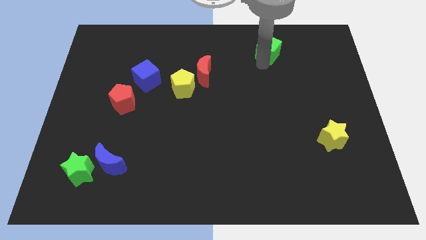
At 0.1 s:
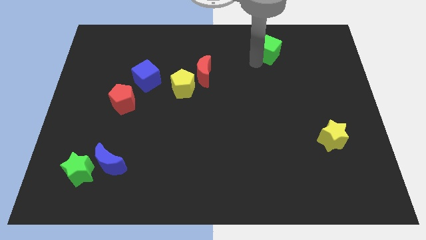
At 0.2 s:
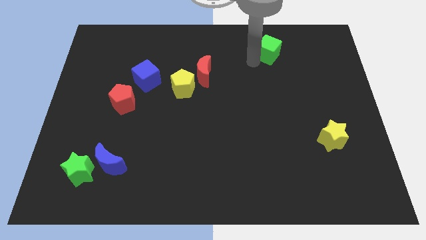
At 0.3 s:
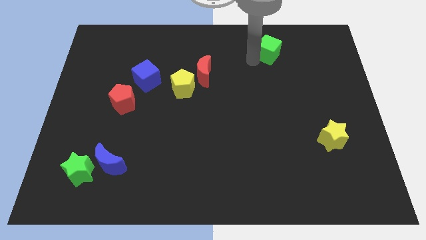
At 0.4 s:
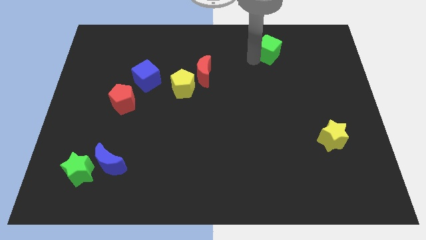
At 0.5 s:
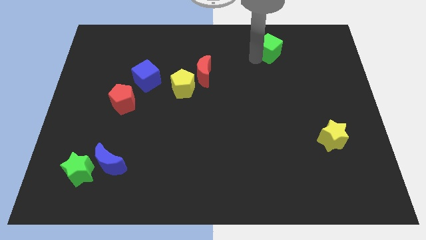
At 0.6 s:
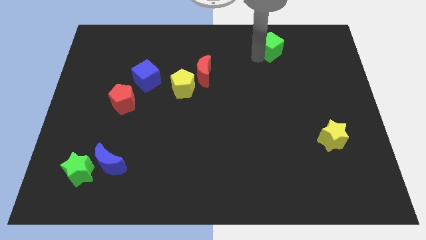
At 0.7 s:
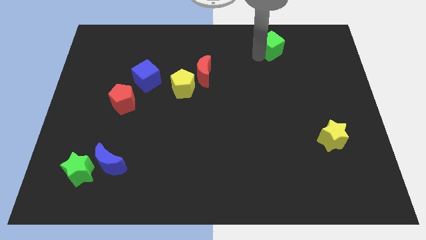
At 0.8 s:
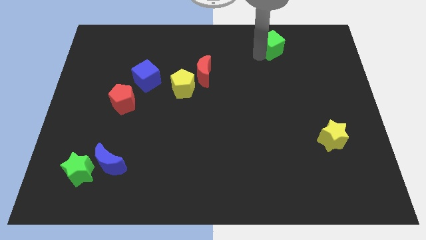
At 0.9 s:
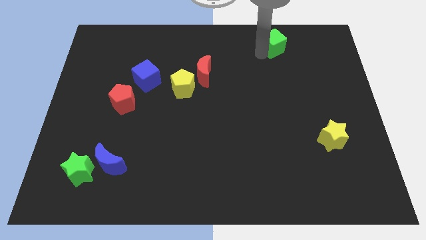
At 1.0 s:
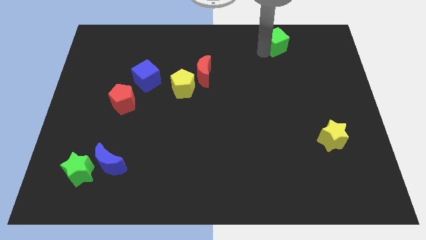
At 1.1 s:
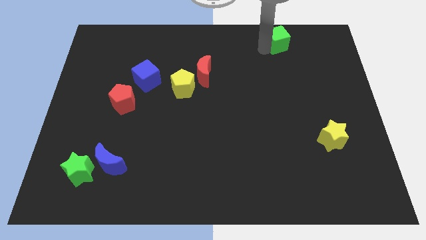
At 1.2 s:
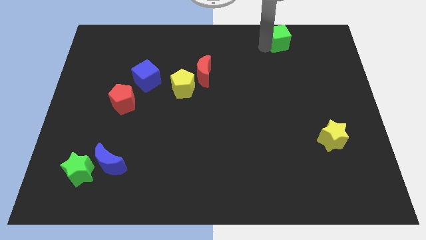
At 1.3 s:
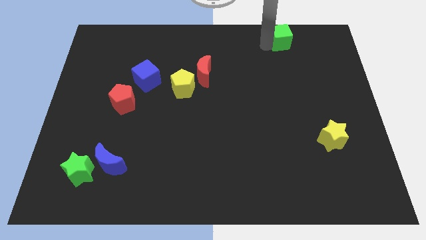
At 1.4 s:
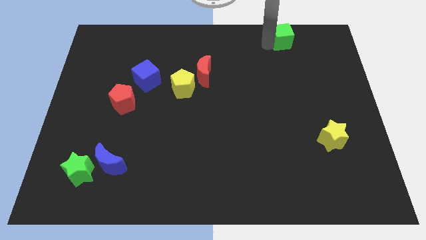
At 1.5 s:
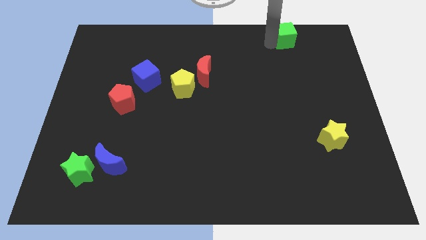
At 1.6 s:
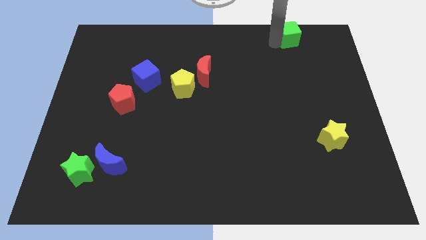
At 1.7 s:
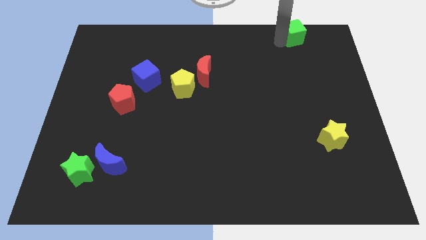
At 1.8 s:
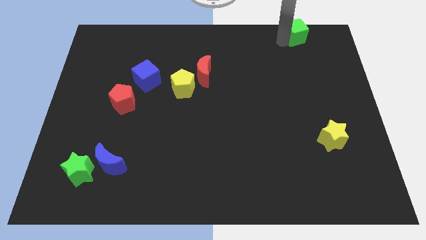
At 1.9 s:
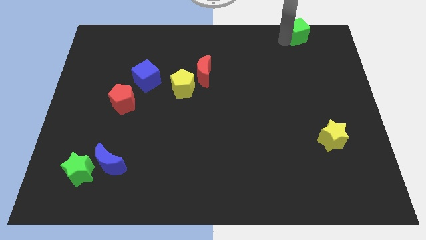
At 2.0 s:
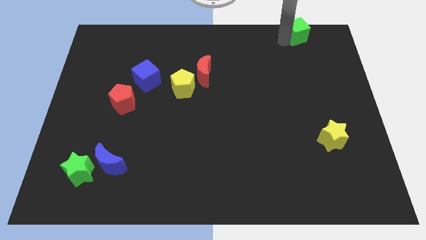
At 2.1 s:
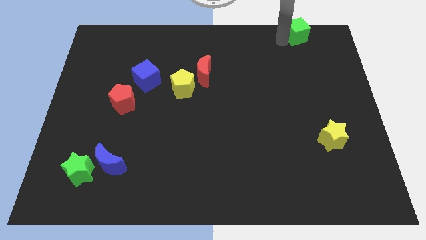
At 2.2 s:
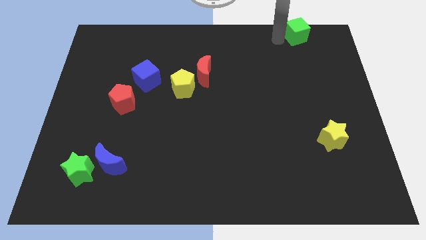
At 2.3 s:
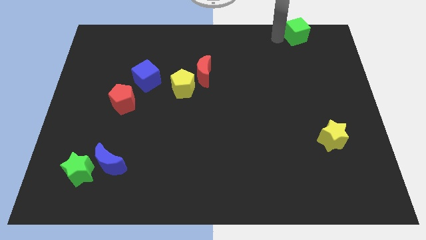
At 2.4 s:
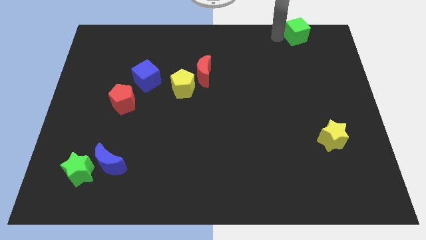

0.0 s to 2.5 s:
place the green cube top right corner of the board

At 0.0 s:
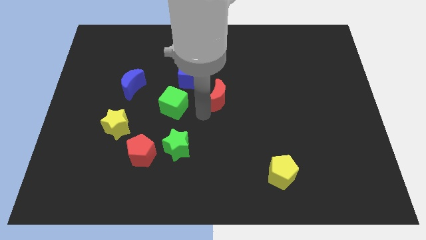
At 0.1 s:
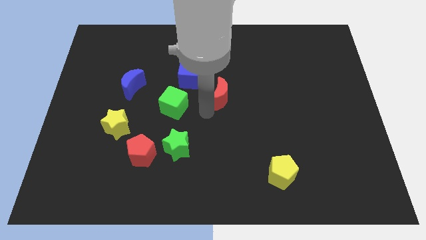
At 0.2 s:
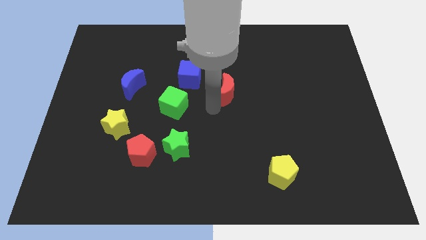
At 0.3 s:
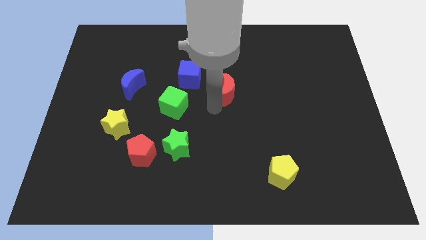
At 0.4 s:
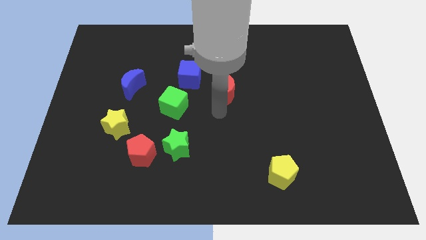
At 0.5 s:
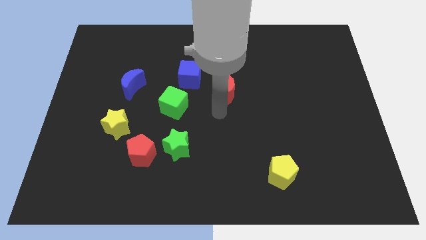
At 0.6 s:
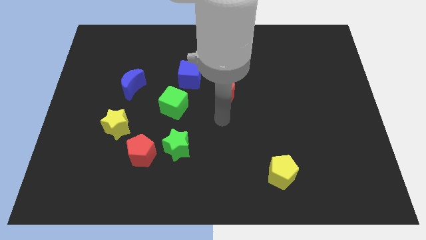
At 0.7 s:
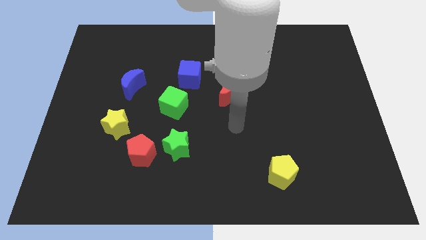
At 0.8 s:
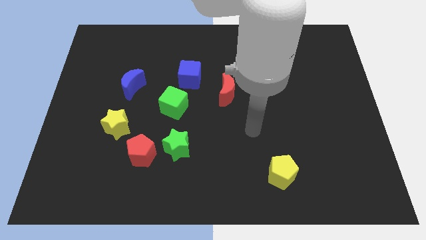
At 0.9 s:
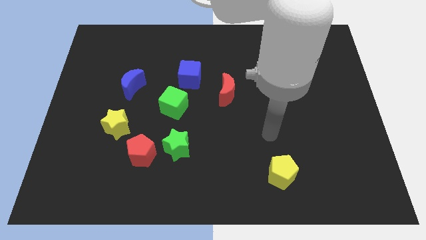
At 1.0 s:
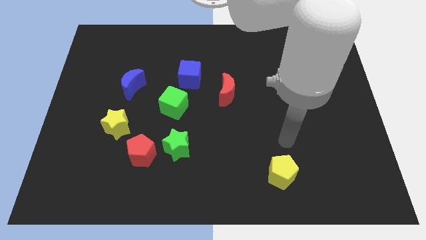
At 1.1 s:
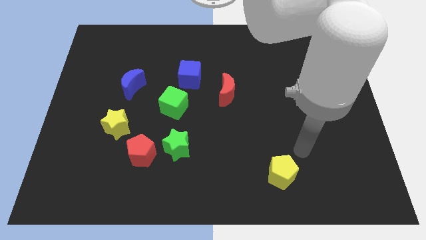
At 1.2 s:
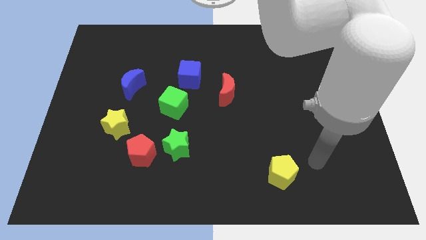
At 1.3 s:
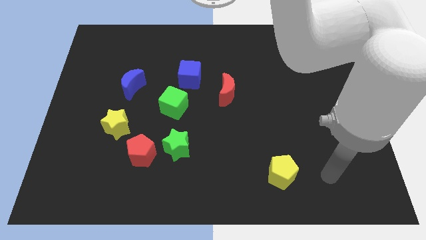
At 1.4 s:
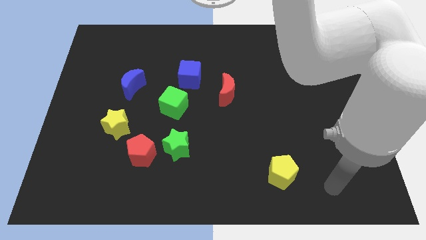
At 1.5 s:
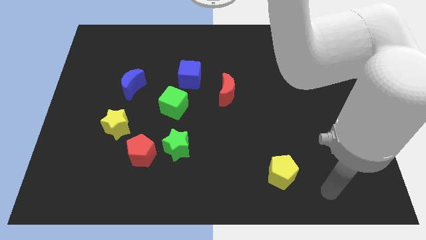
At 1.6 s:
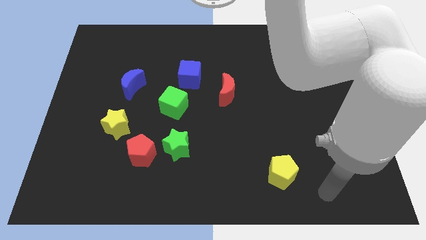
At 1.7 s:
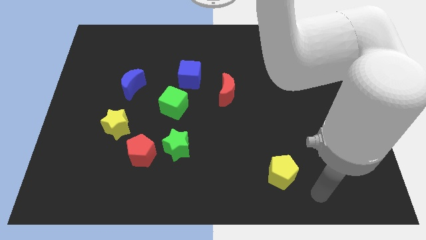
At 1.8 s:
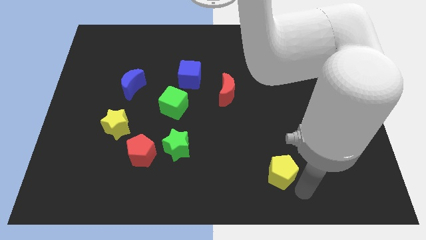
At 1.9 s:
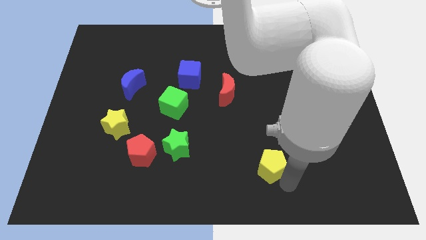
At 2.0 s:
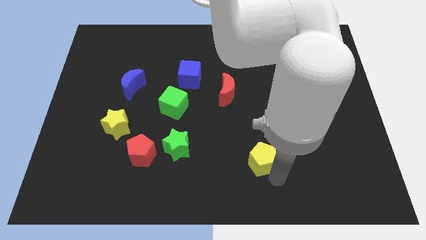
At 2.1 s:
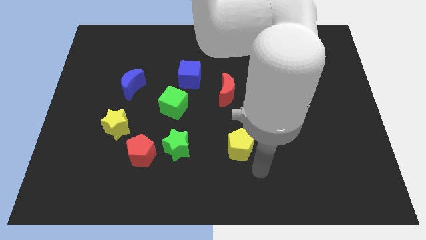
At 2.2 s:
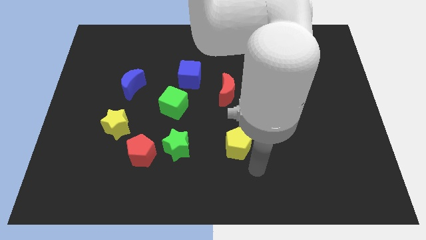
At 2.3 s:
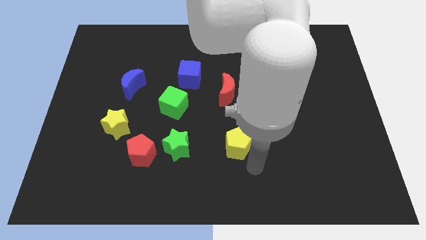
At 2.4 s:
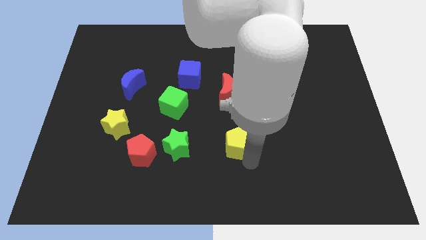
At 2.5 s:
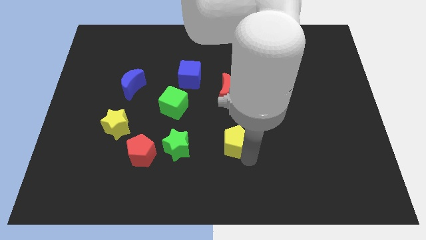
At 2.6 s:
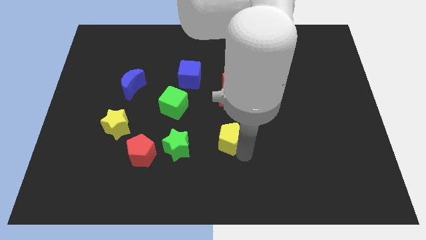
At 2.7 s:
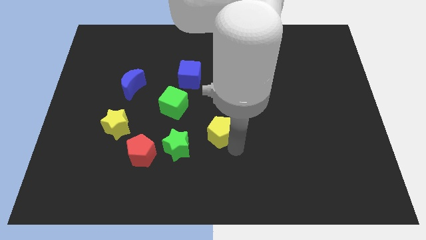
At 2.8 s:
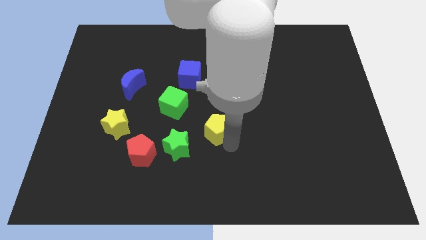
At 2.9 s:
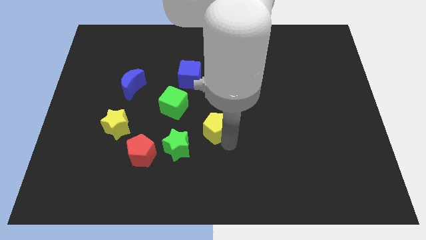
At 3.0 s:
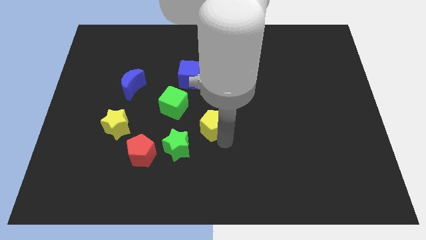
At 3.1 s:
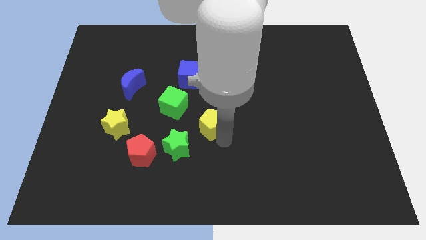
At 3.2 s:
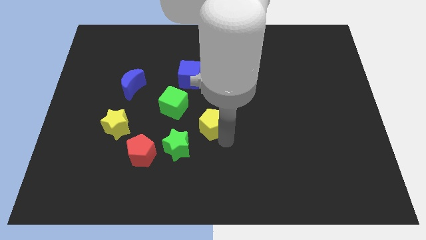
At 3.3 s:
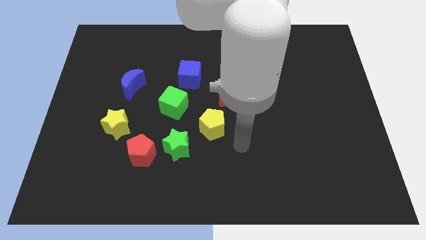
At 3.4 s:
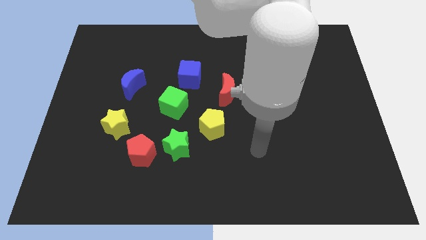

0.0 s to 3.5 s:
place the yellow pentagon diagonally top right to the green star

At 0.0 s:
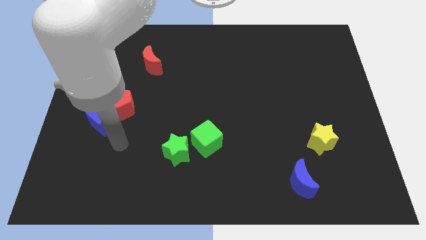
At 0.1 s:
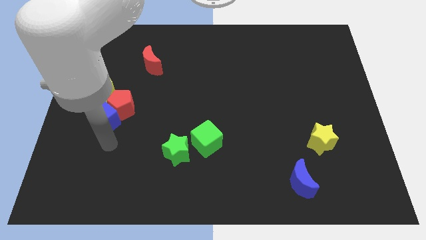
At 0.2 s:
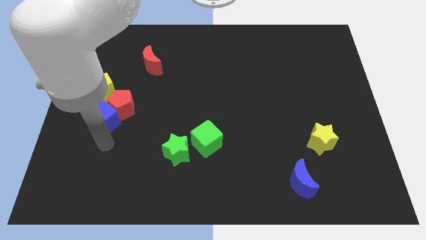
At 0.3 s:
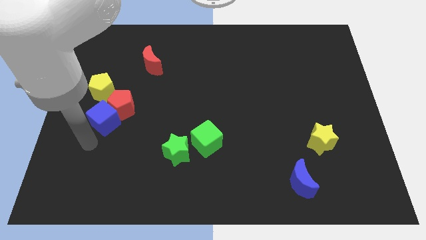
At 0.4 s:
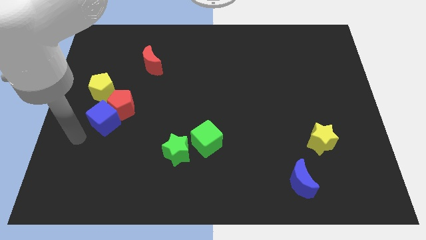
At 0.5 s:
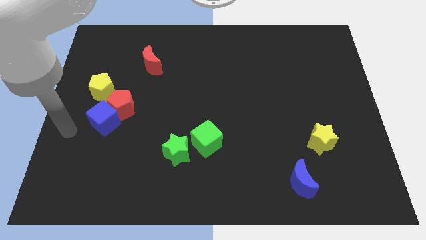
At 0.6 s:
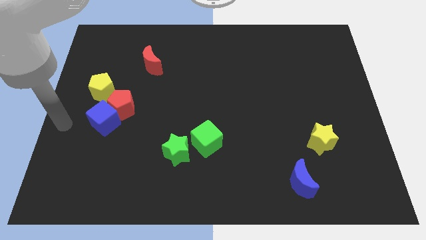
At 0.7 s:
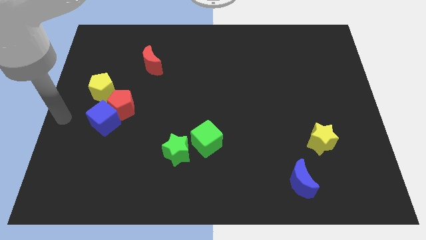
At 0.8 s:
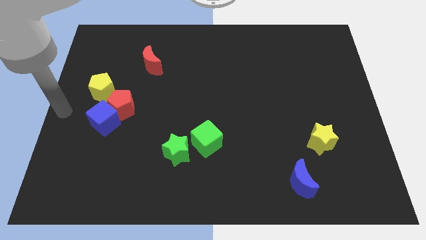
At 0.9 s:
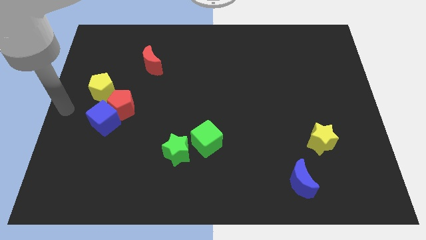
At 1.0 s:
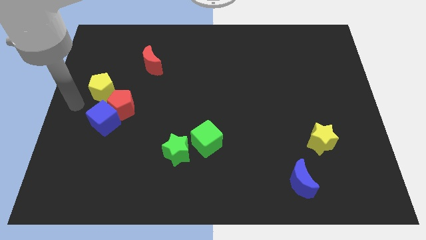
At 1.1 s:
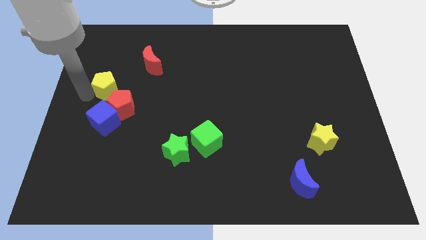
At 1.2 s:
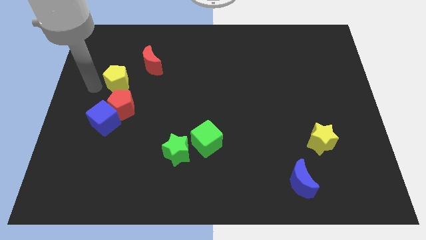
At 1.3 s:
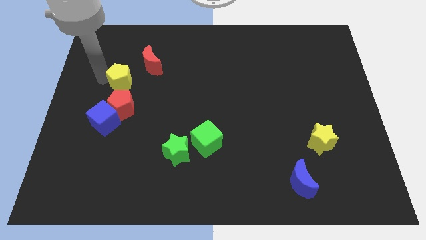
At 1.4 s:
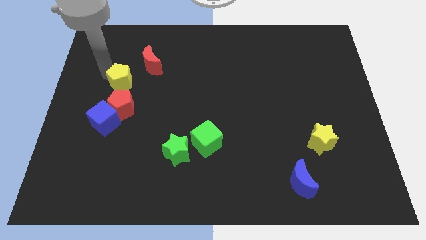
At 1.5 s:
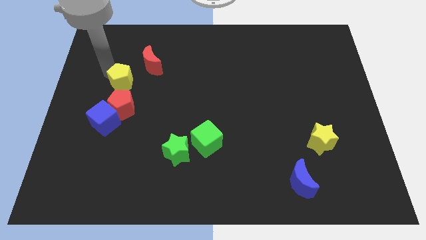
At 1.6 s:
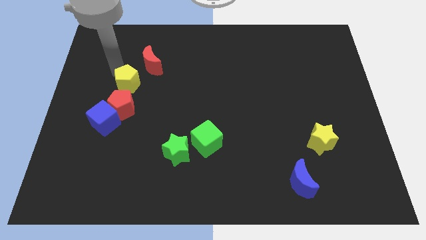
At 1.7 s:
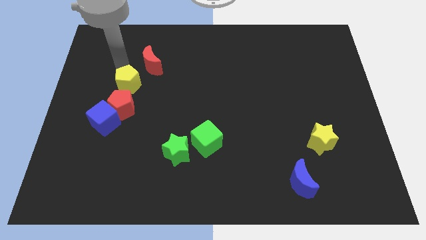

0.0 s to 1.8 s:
place the yellow pentagon on top of red pentagon

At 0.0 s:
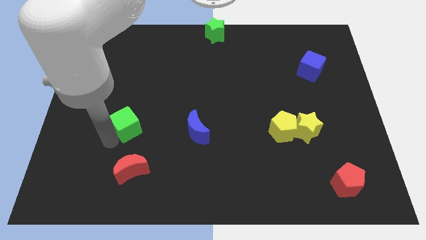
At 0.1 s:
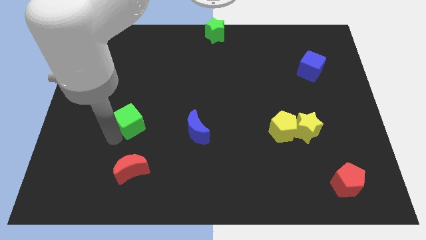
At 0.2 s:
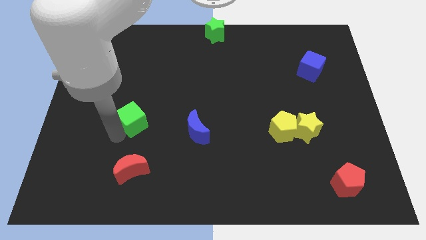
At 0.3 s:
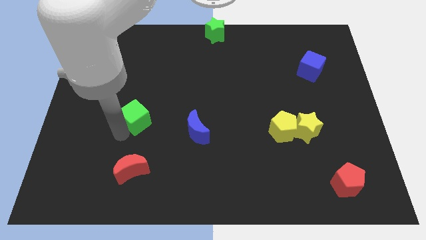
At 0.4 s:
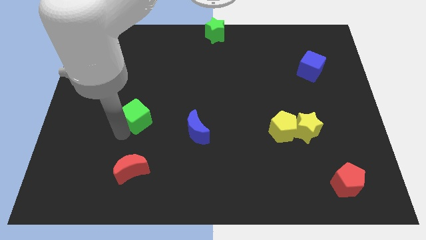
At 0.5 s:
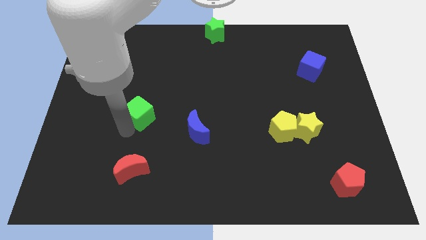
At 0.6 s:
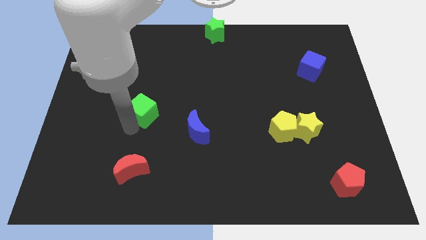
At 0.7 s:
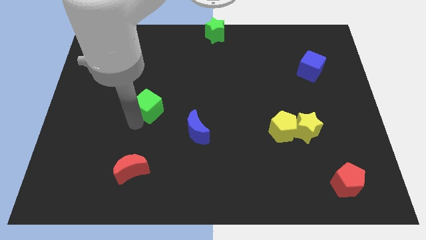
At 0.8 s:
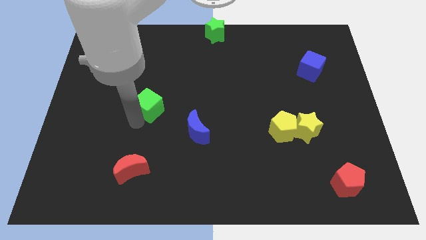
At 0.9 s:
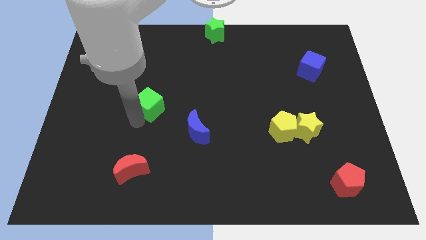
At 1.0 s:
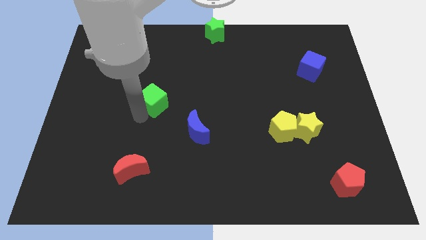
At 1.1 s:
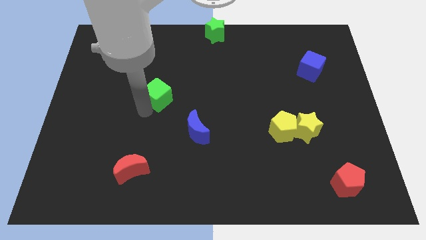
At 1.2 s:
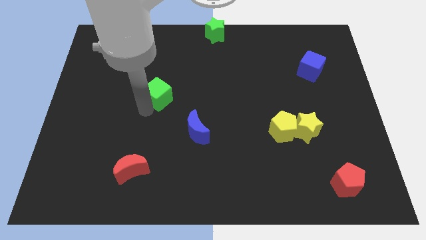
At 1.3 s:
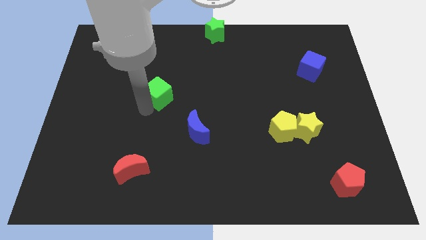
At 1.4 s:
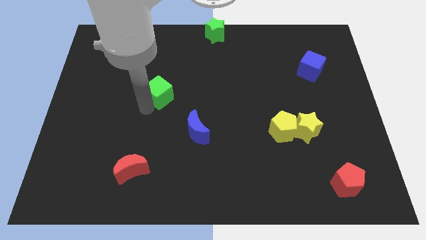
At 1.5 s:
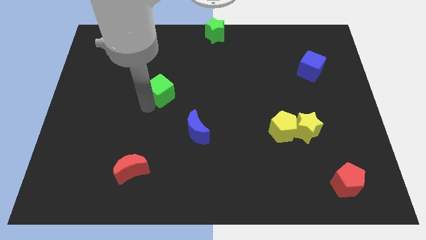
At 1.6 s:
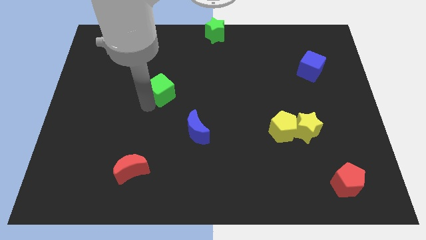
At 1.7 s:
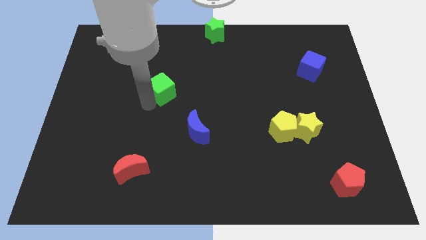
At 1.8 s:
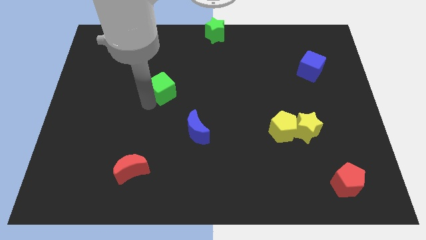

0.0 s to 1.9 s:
place green cube to the top left of blue moon
